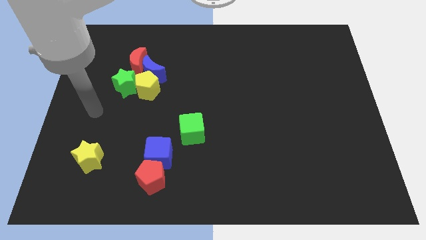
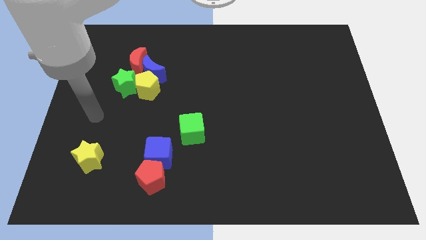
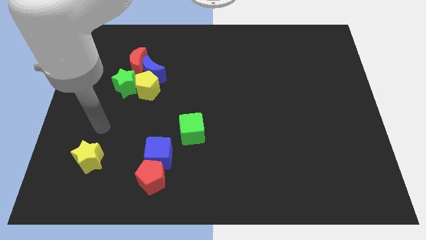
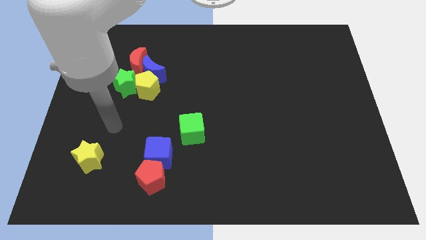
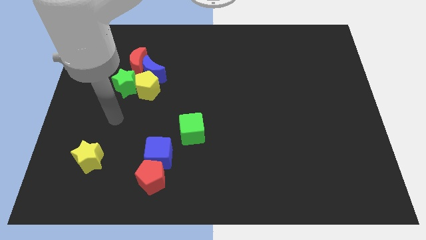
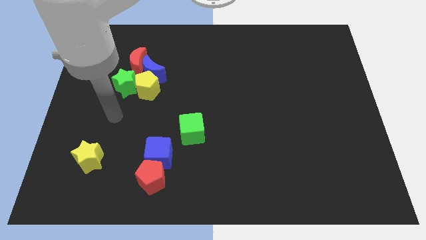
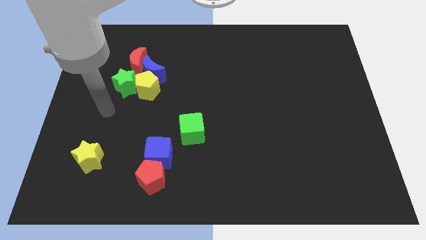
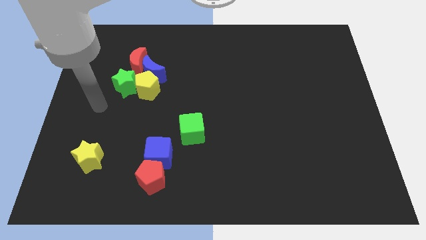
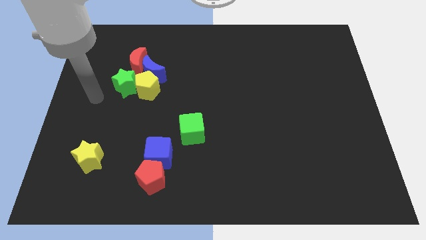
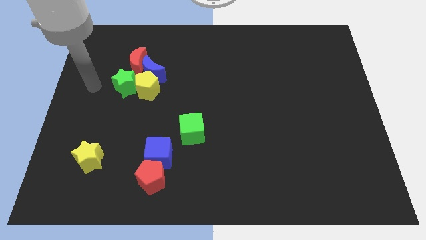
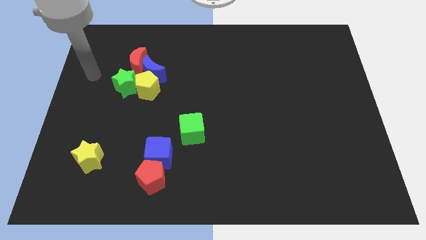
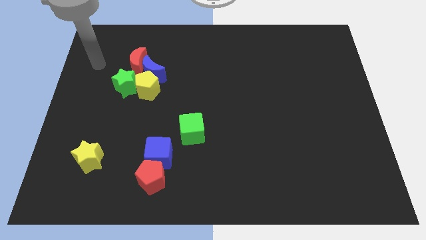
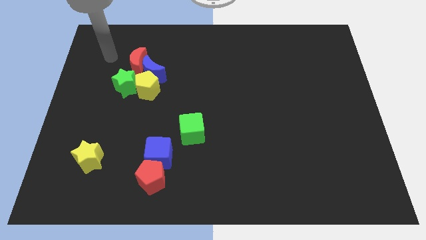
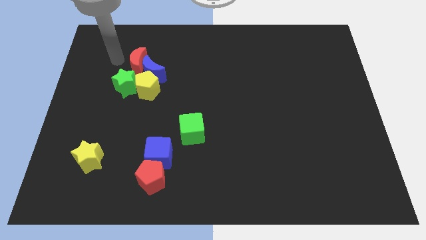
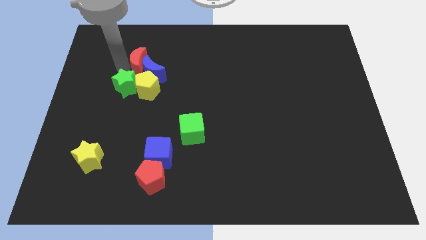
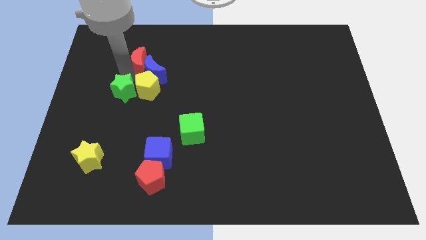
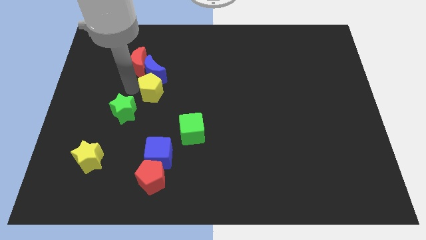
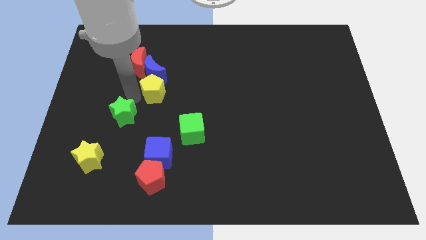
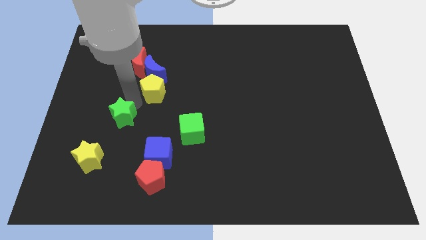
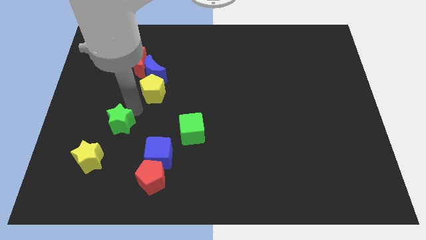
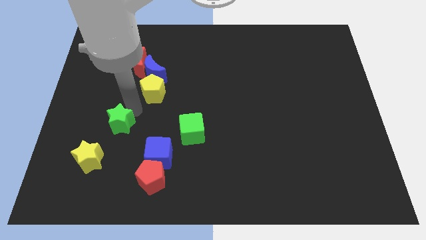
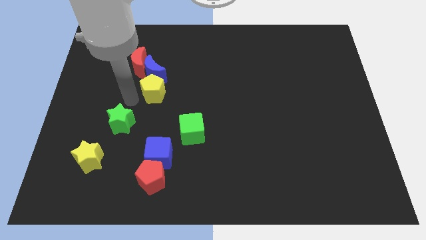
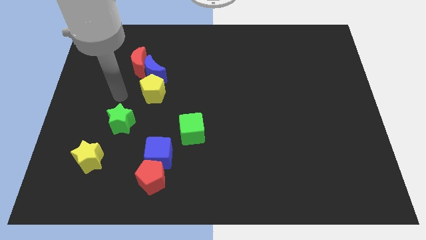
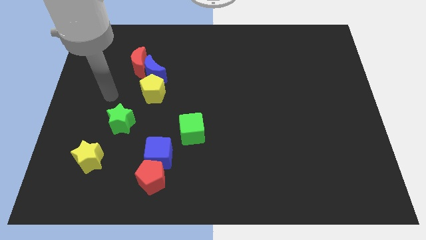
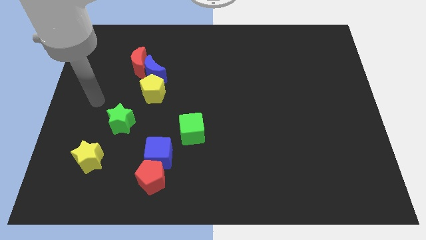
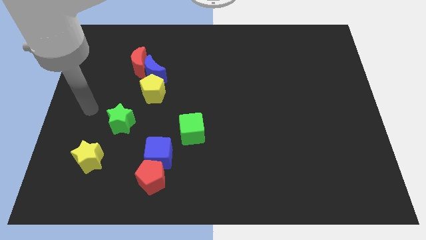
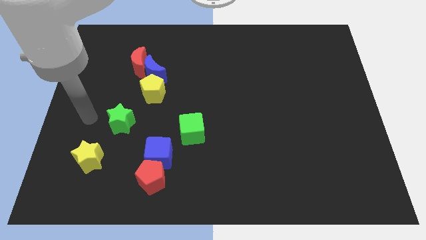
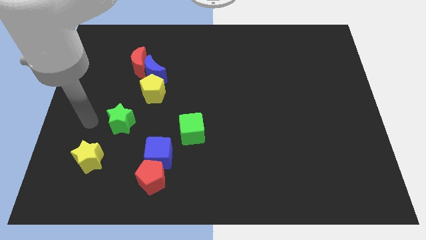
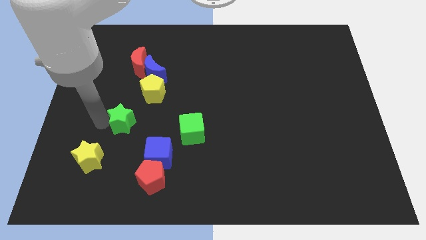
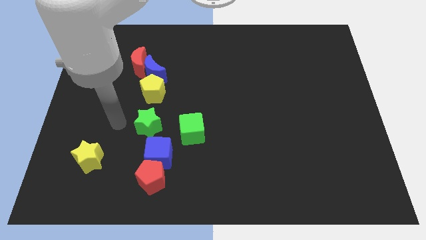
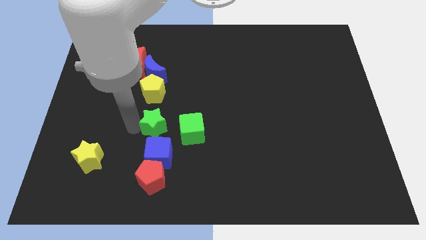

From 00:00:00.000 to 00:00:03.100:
push green star to the top of the blue cube

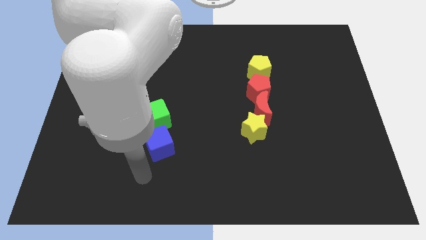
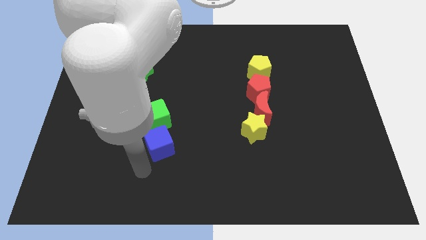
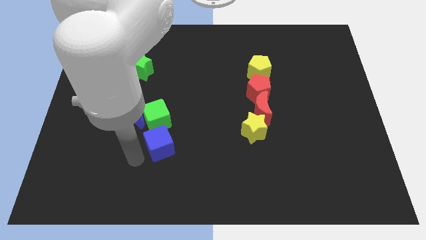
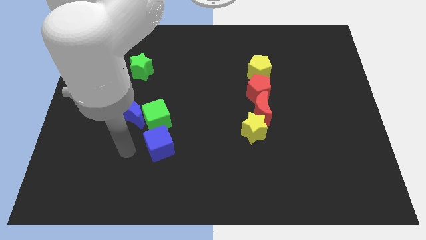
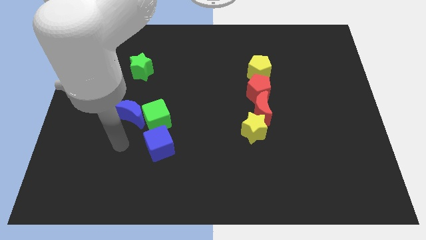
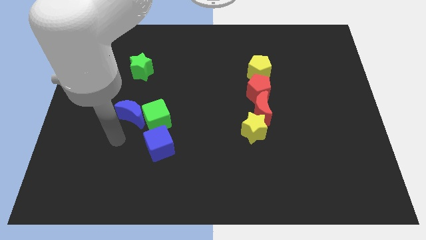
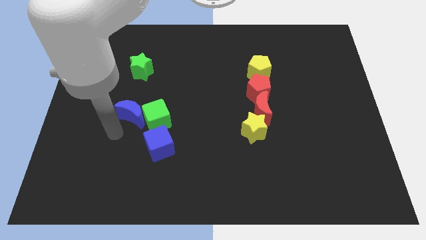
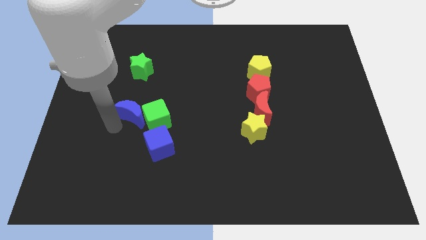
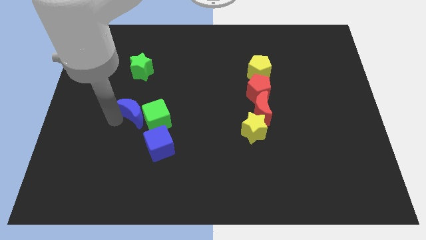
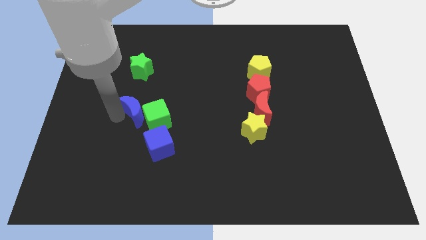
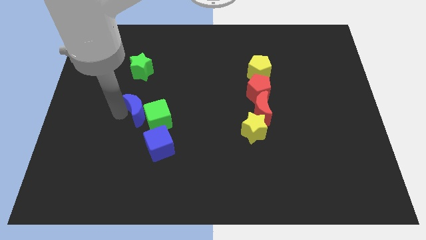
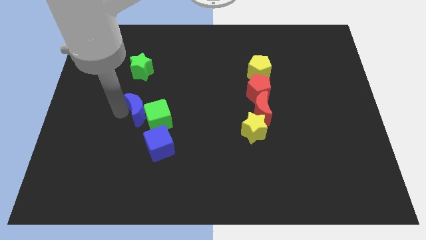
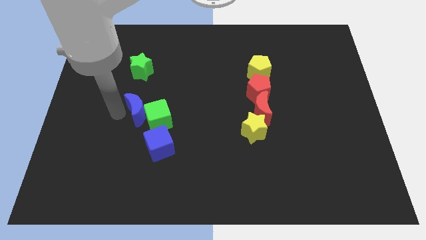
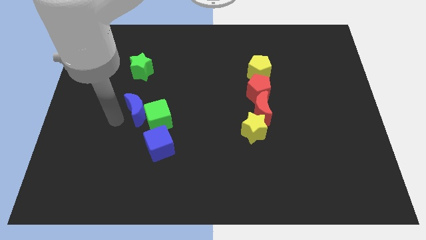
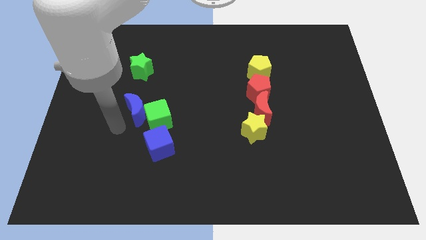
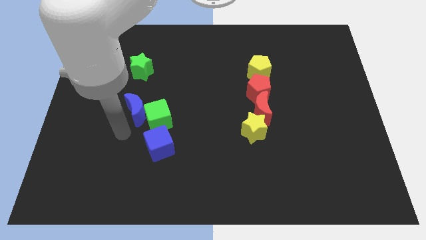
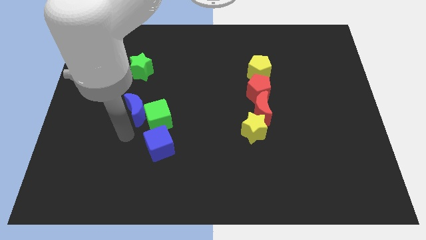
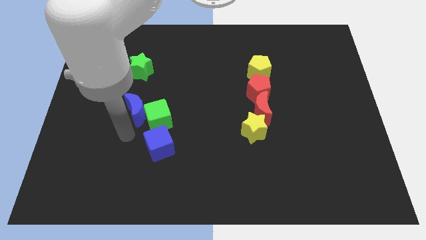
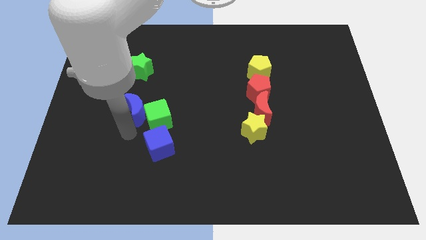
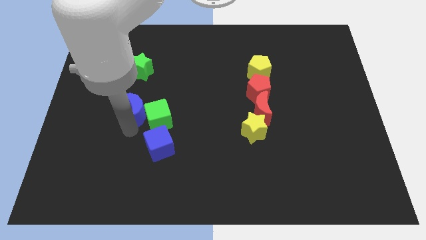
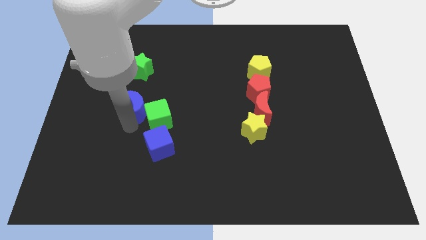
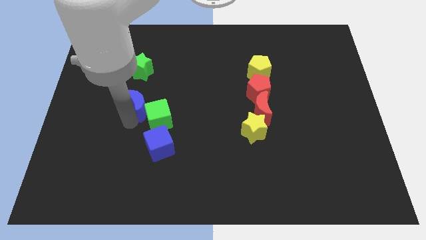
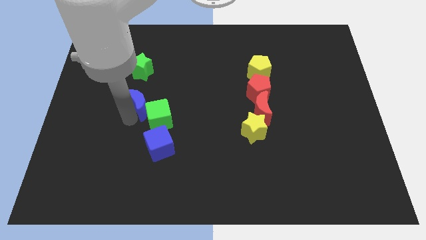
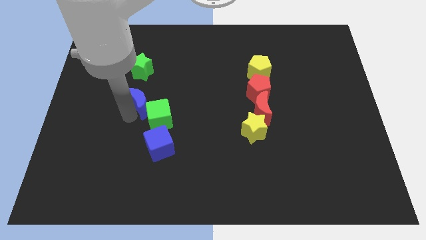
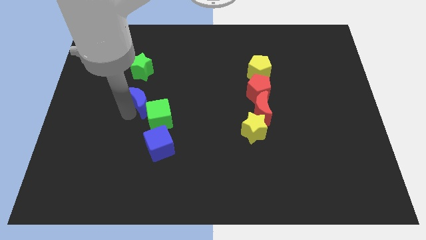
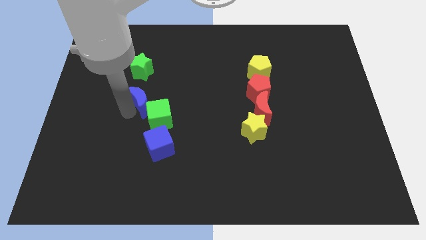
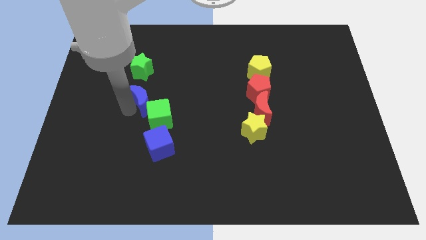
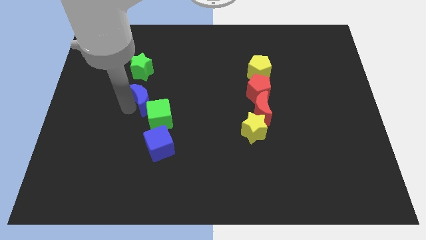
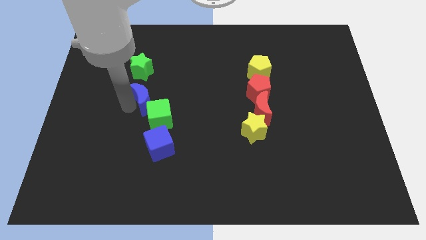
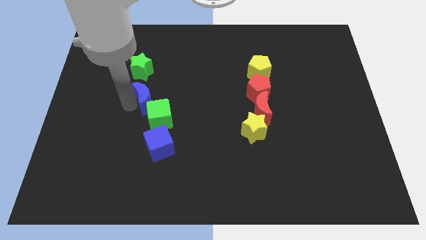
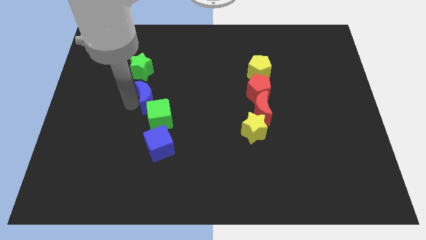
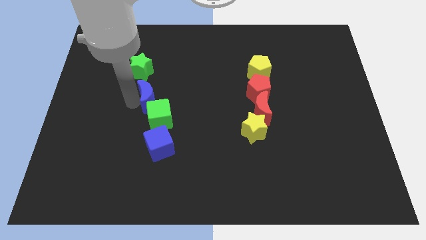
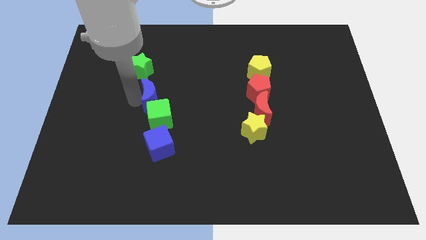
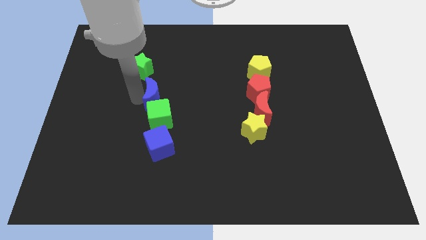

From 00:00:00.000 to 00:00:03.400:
place blue crescent in between the green blocks

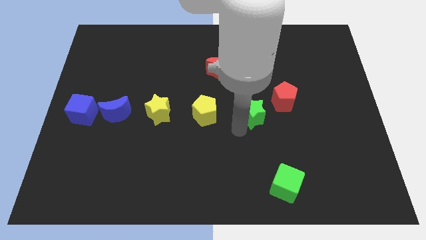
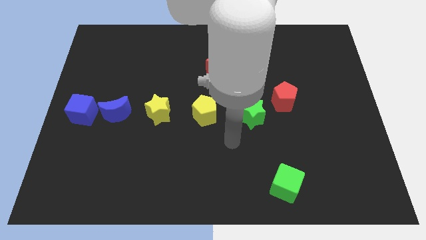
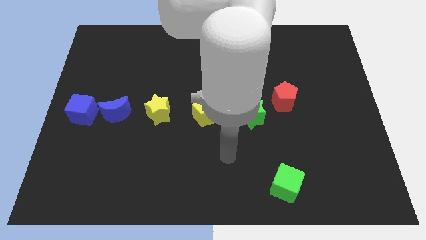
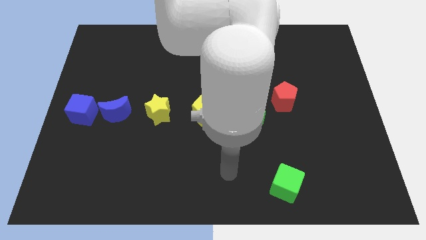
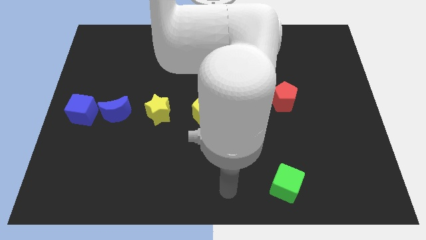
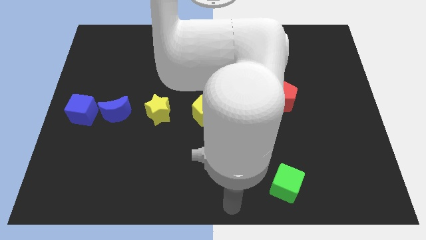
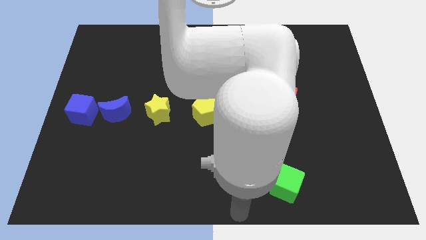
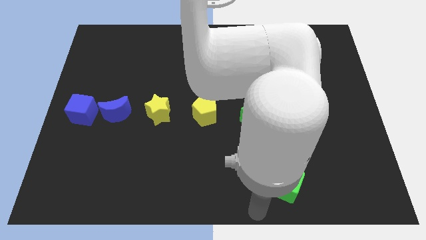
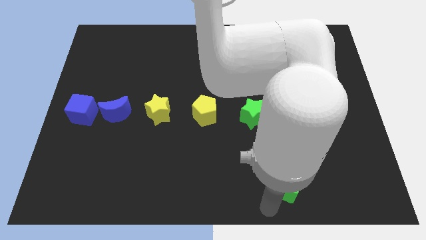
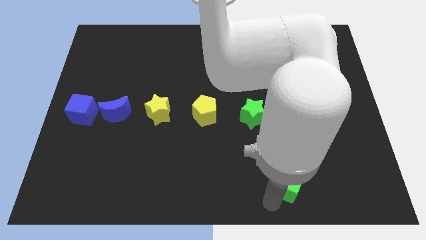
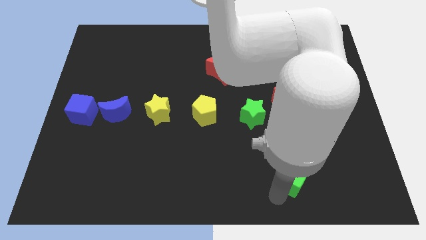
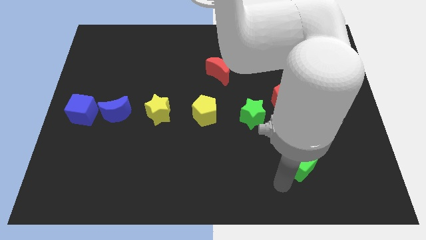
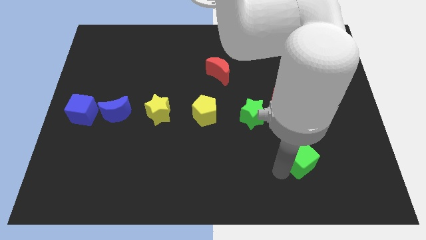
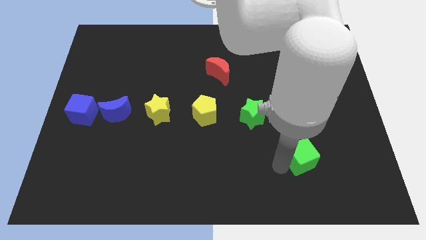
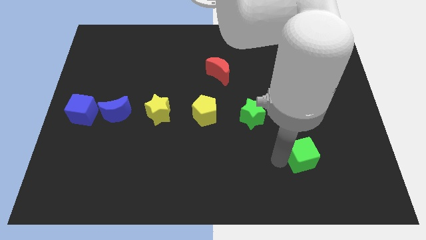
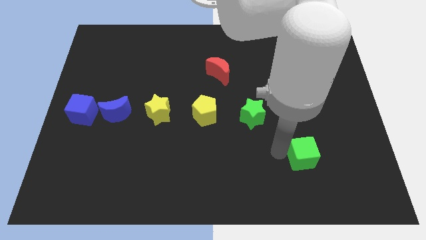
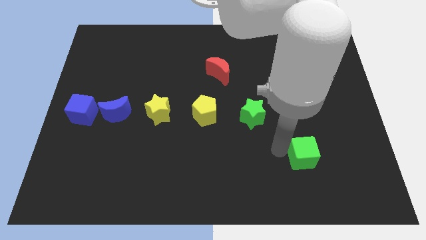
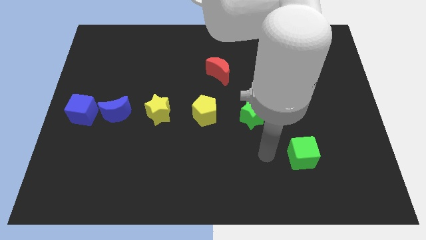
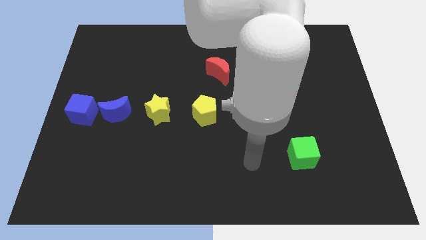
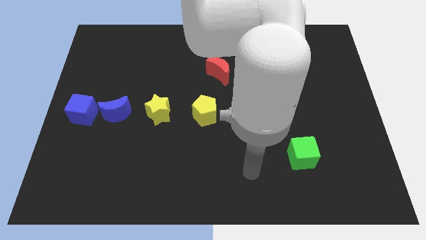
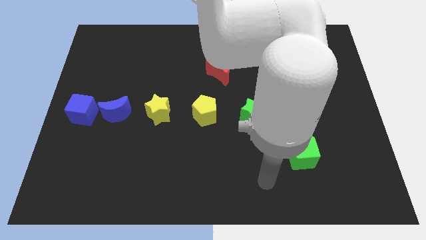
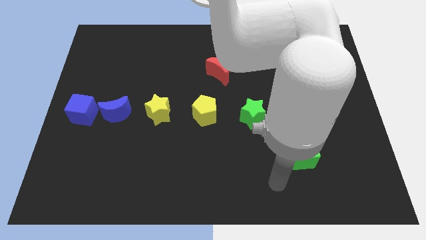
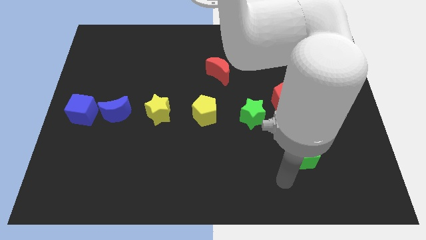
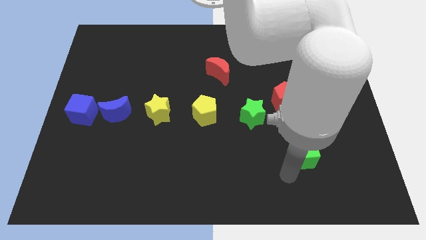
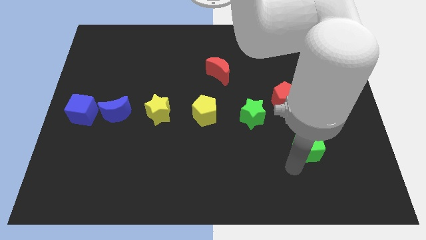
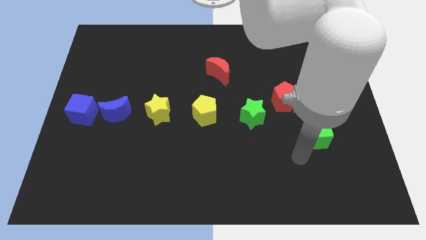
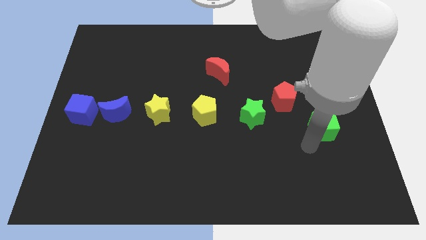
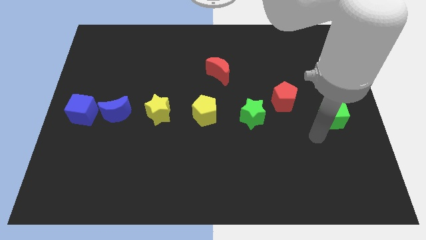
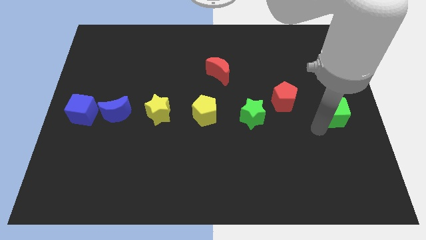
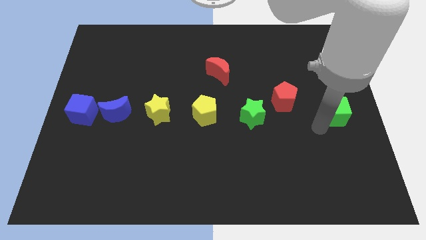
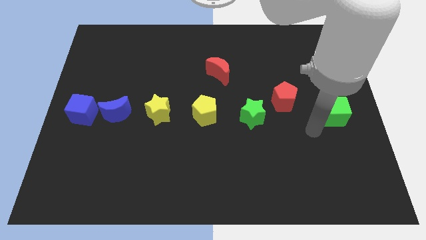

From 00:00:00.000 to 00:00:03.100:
push the green cube to the center right of the table
